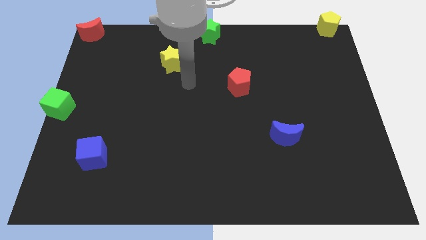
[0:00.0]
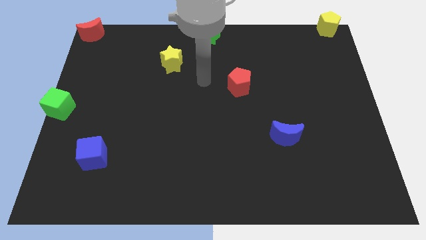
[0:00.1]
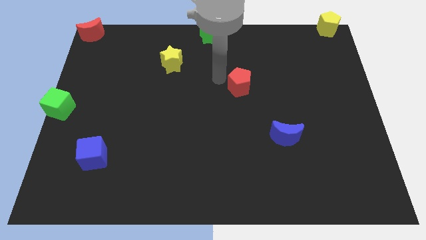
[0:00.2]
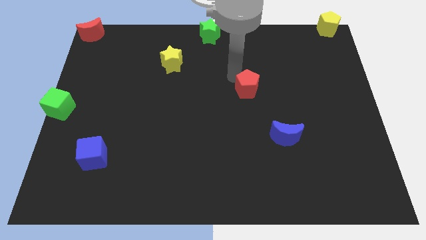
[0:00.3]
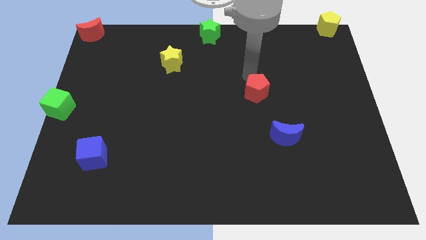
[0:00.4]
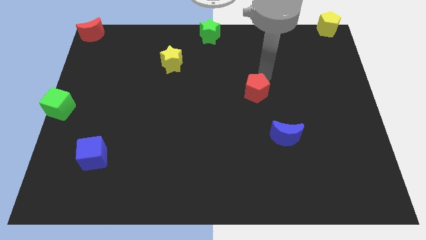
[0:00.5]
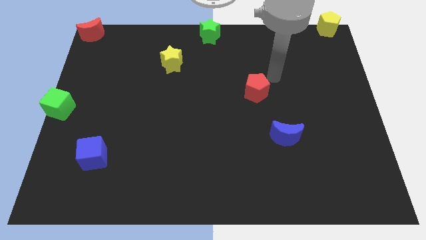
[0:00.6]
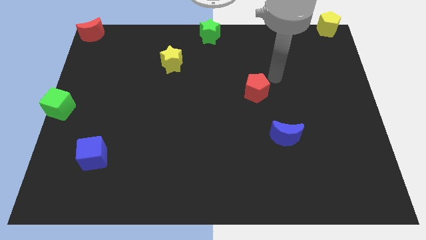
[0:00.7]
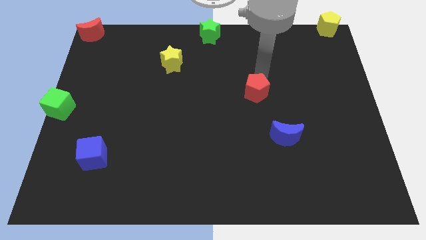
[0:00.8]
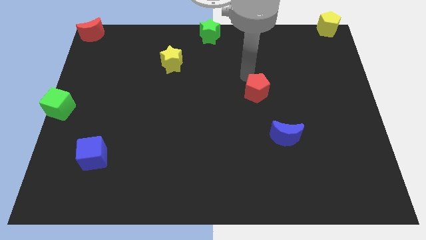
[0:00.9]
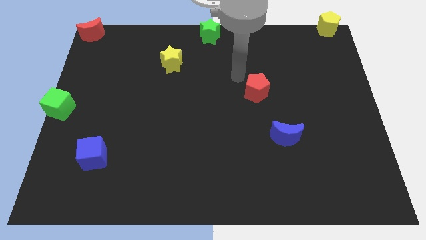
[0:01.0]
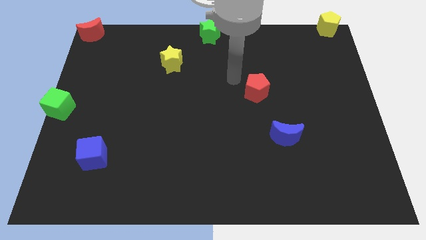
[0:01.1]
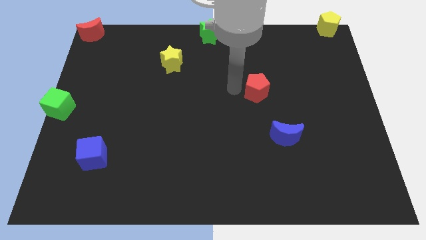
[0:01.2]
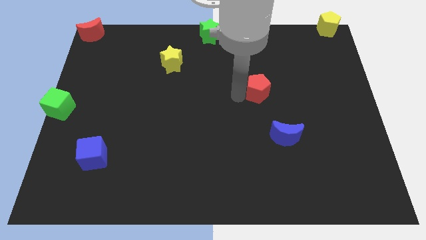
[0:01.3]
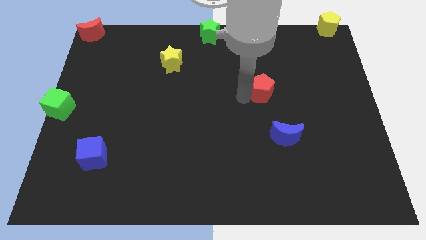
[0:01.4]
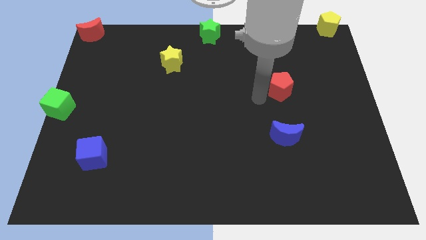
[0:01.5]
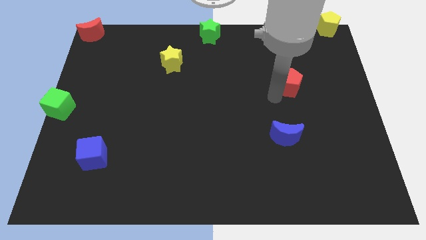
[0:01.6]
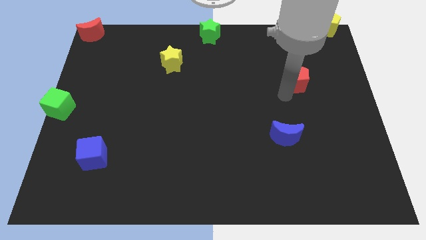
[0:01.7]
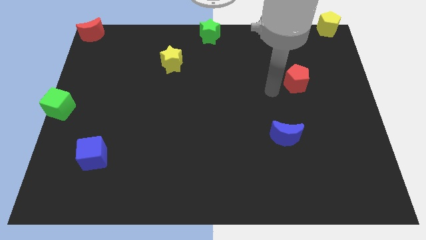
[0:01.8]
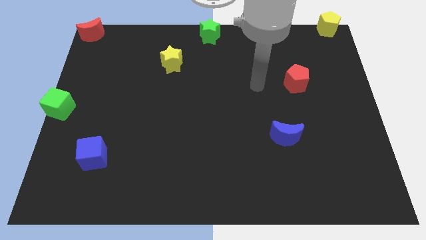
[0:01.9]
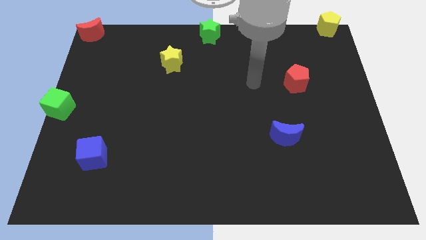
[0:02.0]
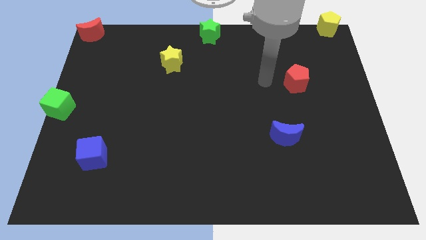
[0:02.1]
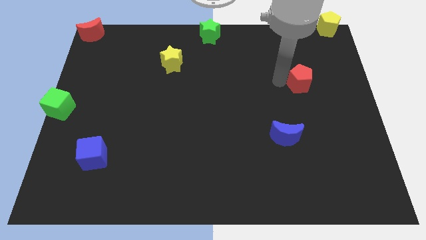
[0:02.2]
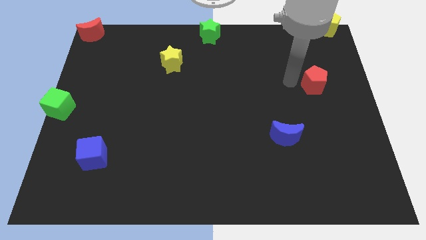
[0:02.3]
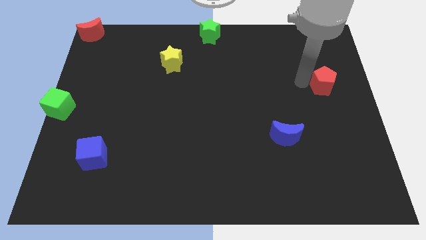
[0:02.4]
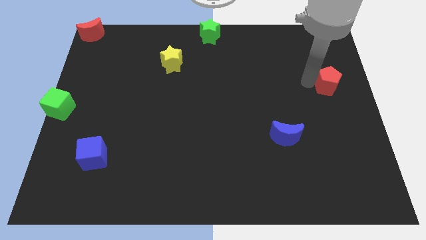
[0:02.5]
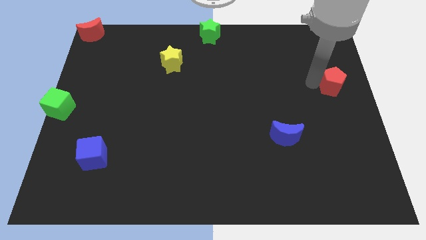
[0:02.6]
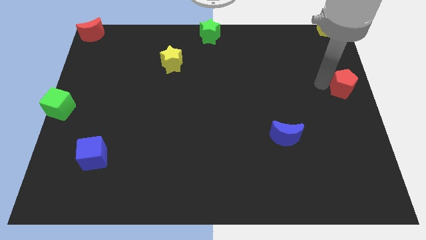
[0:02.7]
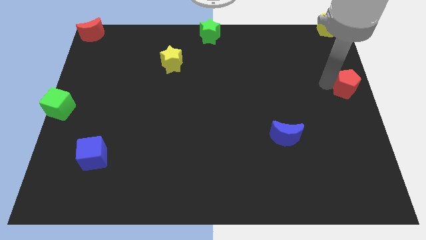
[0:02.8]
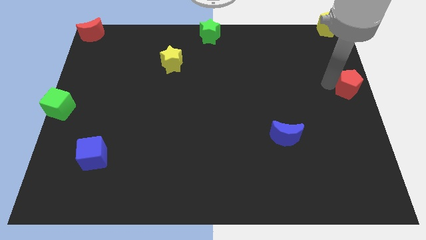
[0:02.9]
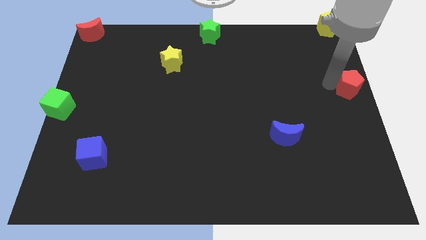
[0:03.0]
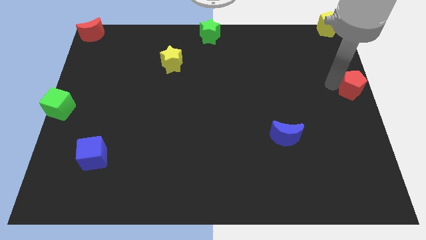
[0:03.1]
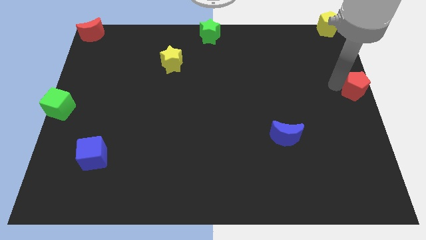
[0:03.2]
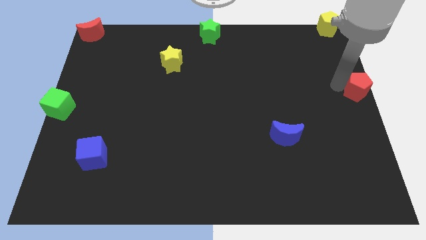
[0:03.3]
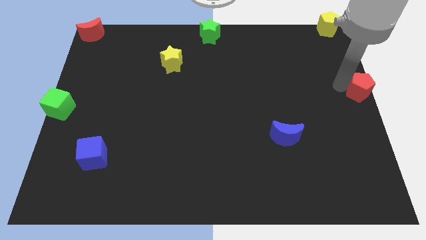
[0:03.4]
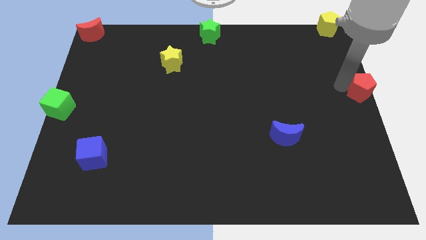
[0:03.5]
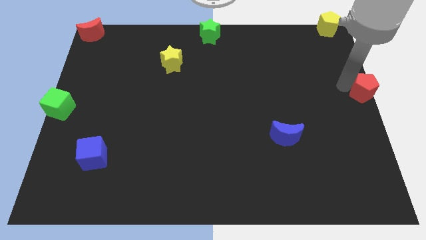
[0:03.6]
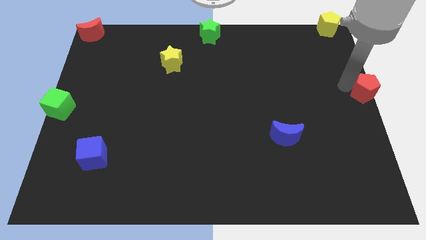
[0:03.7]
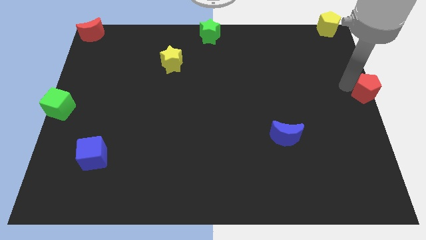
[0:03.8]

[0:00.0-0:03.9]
place the red pentagon at the right center of the board

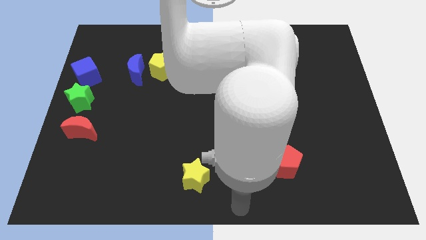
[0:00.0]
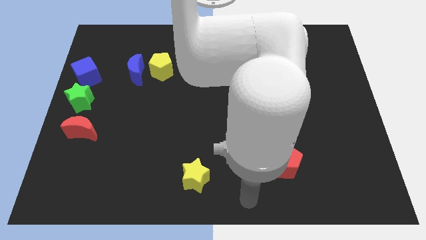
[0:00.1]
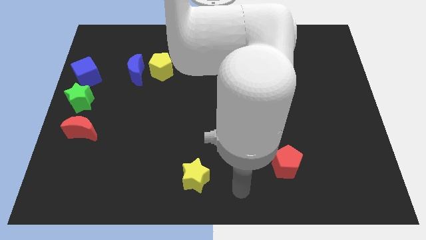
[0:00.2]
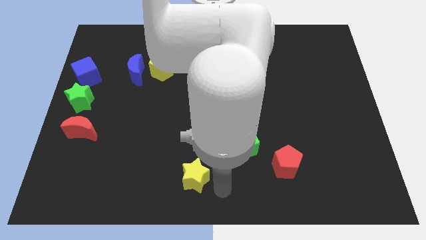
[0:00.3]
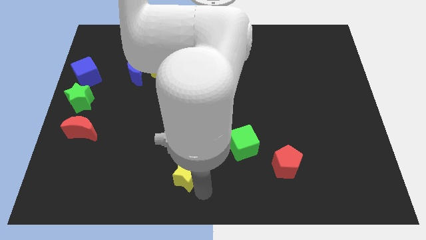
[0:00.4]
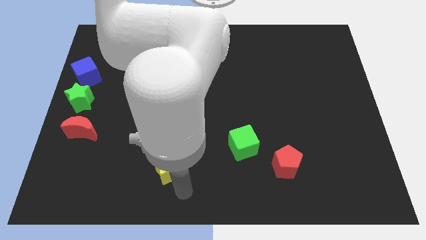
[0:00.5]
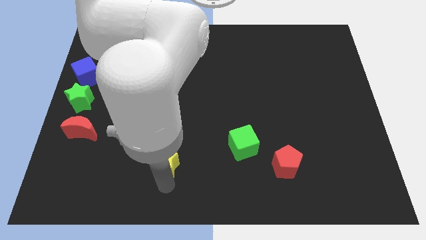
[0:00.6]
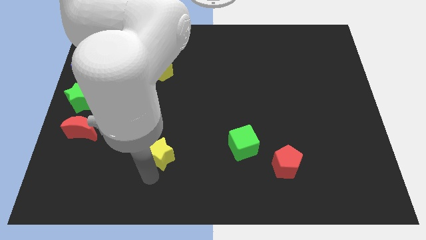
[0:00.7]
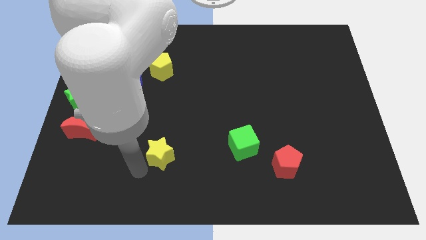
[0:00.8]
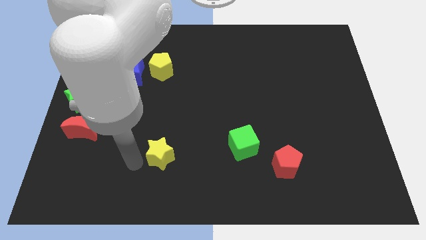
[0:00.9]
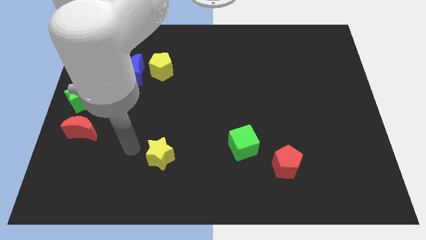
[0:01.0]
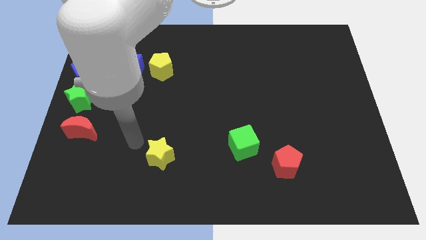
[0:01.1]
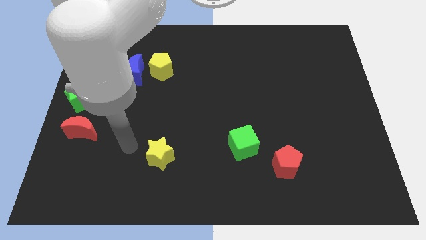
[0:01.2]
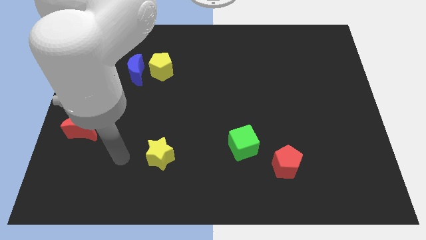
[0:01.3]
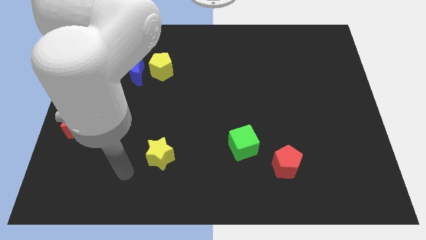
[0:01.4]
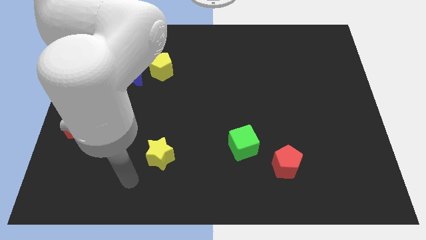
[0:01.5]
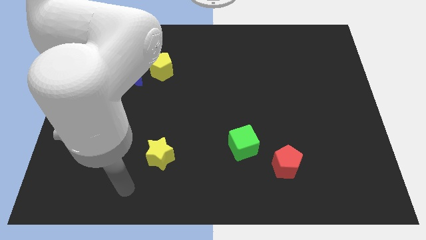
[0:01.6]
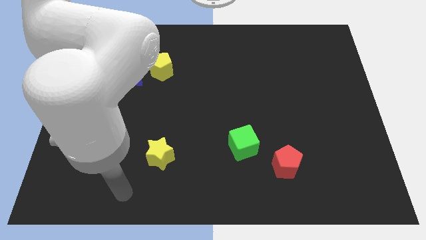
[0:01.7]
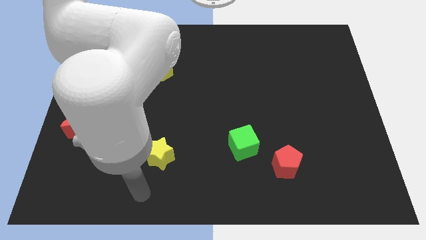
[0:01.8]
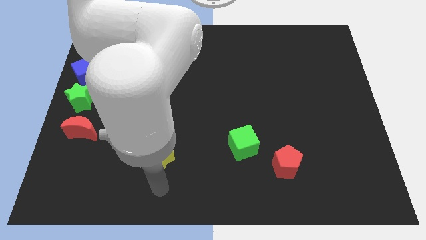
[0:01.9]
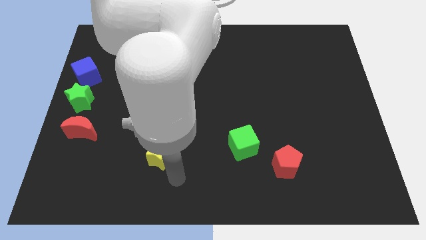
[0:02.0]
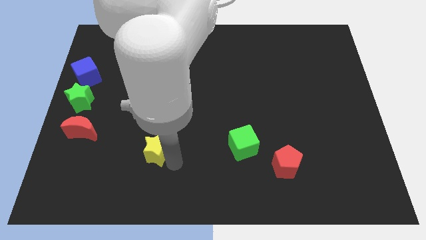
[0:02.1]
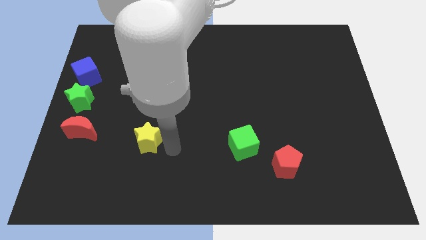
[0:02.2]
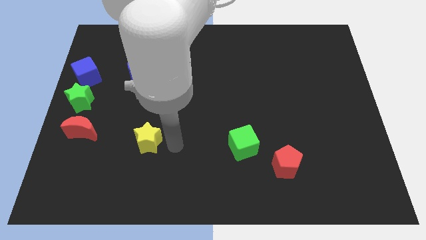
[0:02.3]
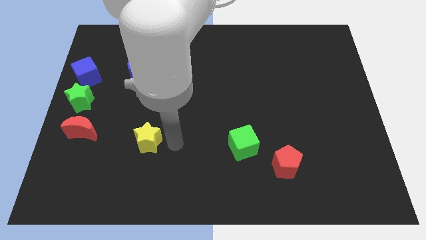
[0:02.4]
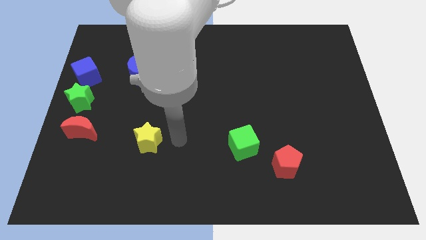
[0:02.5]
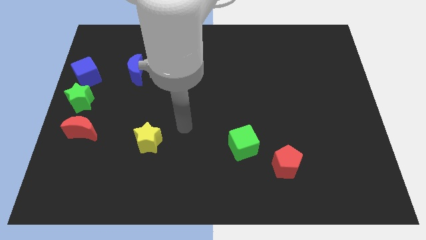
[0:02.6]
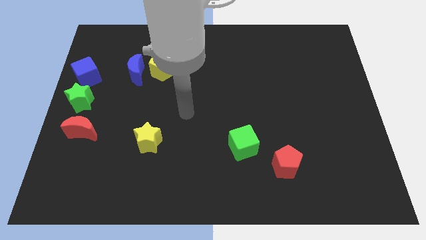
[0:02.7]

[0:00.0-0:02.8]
push the yellow star to the right of red crescent

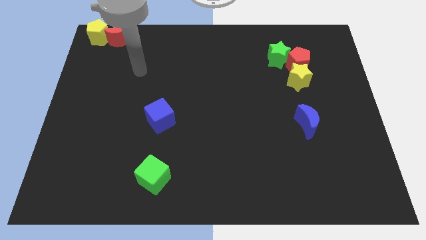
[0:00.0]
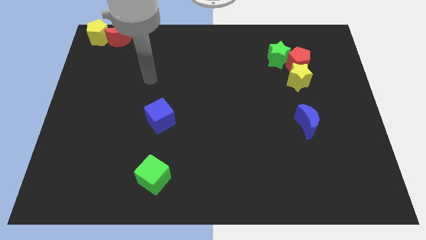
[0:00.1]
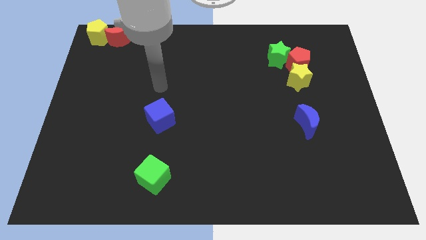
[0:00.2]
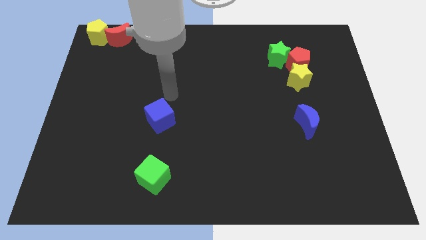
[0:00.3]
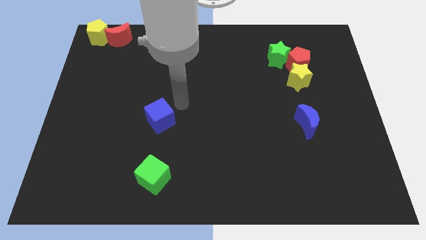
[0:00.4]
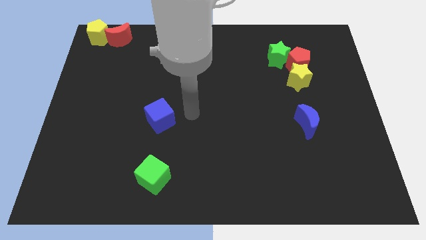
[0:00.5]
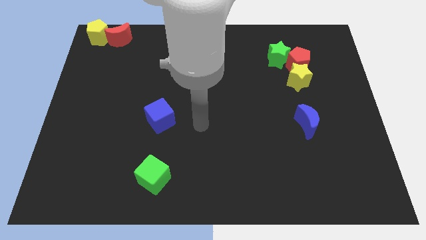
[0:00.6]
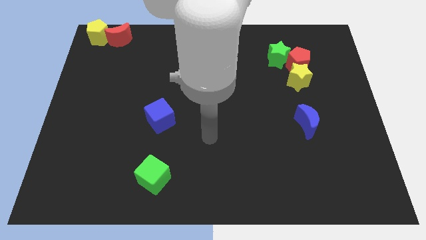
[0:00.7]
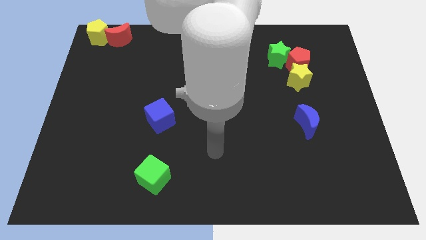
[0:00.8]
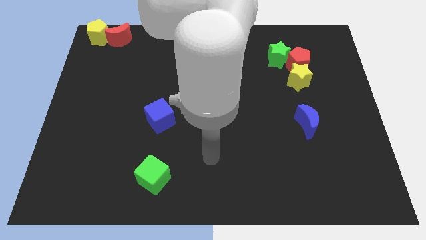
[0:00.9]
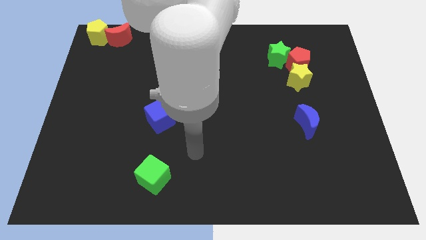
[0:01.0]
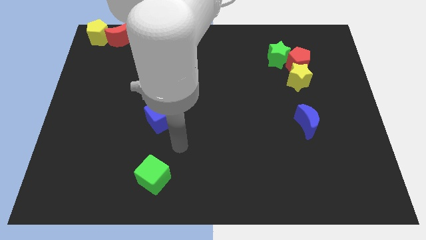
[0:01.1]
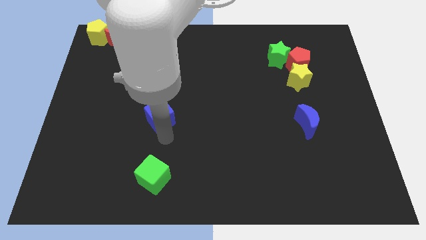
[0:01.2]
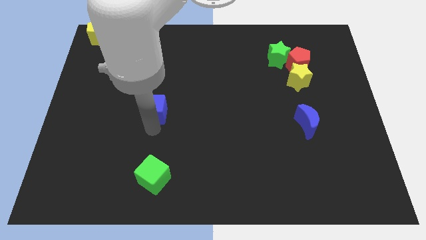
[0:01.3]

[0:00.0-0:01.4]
move the blue cube to the top side of the green cube

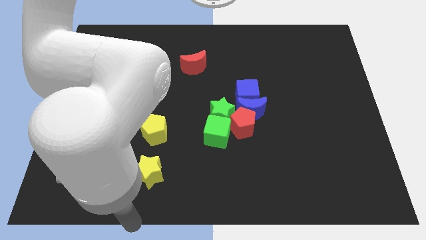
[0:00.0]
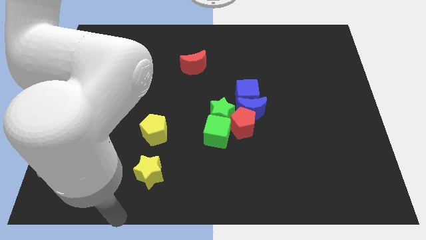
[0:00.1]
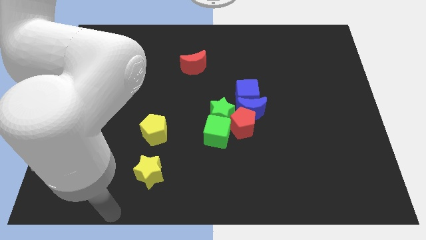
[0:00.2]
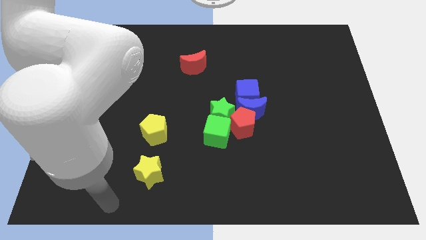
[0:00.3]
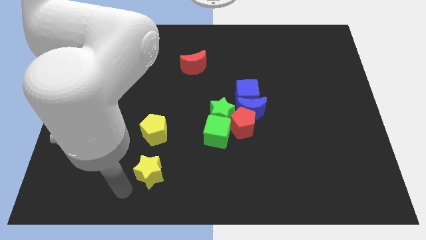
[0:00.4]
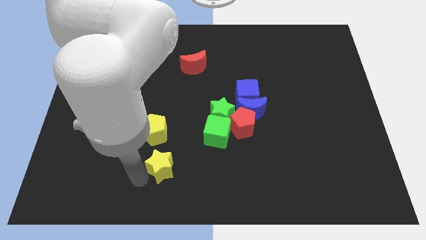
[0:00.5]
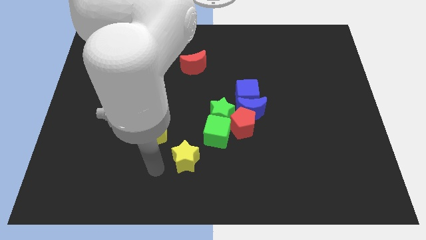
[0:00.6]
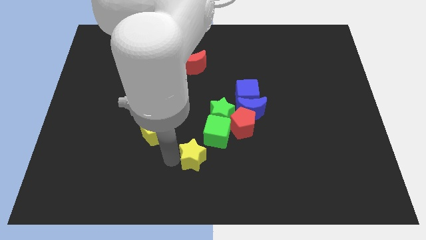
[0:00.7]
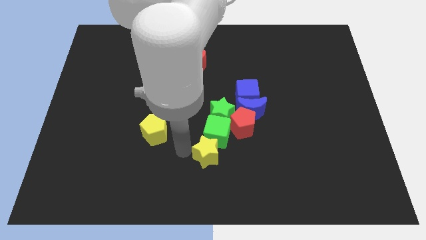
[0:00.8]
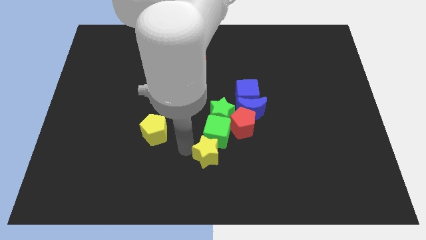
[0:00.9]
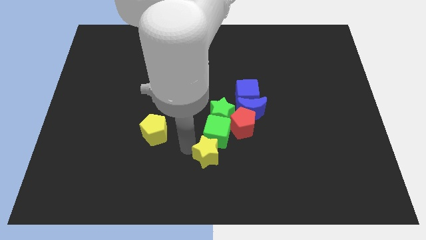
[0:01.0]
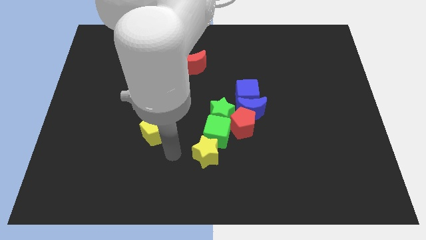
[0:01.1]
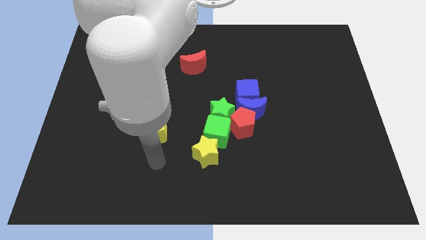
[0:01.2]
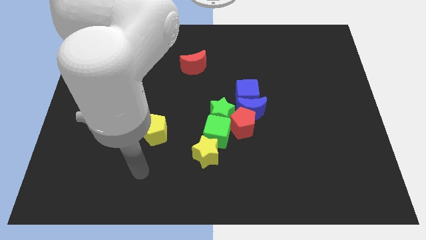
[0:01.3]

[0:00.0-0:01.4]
move the yellow star below the green cube
